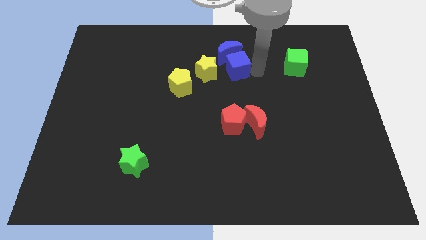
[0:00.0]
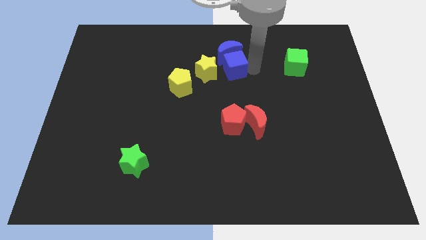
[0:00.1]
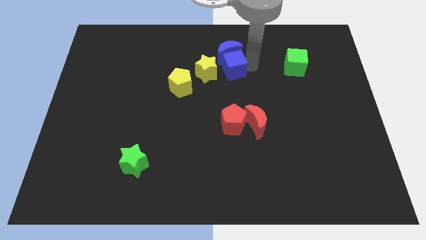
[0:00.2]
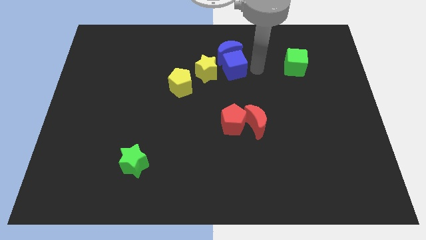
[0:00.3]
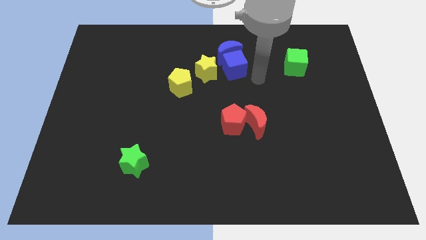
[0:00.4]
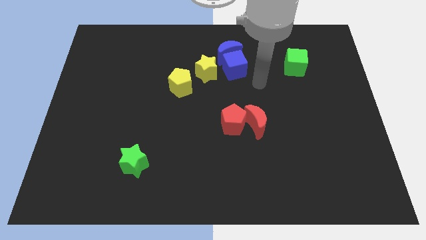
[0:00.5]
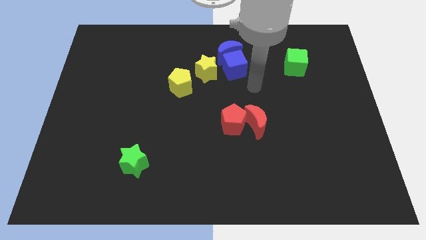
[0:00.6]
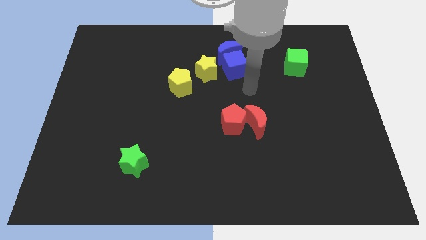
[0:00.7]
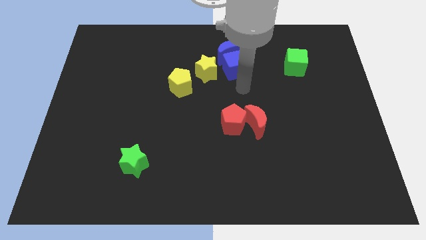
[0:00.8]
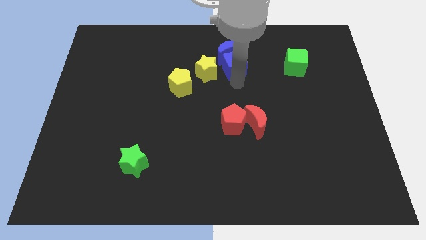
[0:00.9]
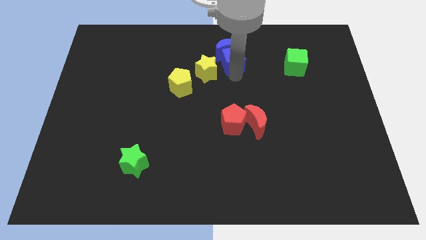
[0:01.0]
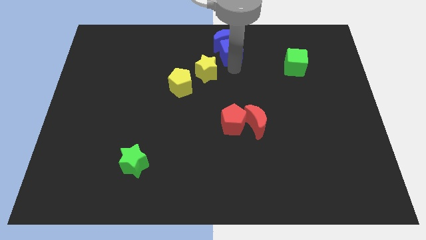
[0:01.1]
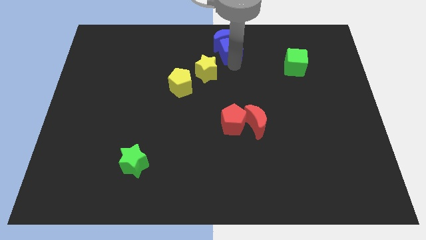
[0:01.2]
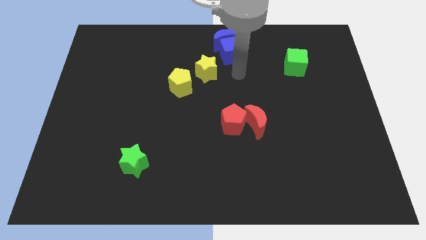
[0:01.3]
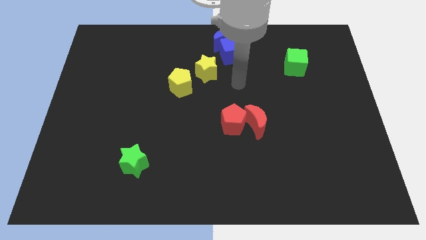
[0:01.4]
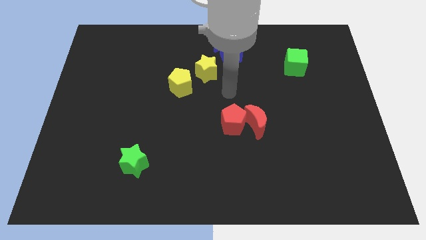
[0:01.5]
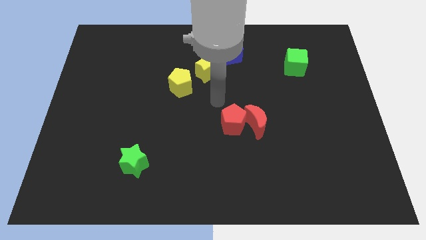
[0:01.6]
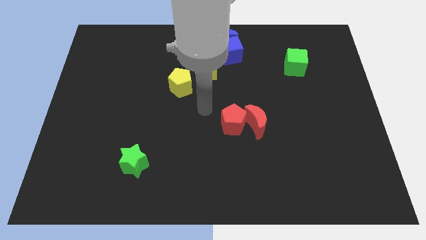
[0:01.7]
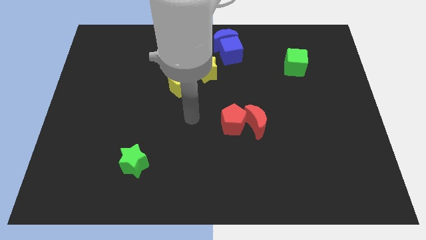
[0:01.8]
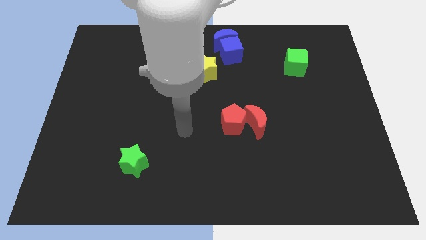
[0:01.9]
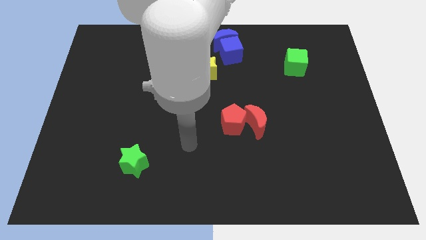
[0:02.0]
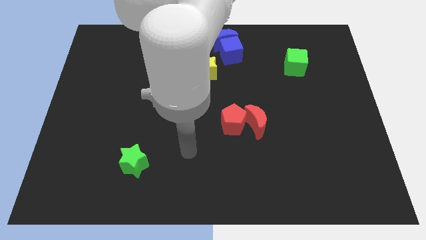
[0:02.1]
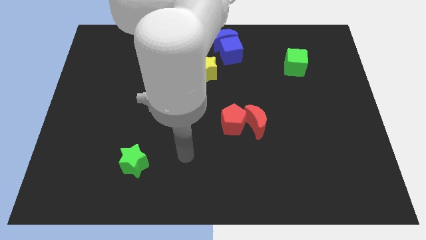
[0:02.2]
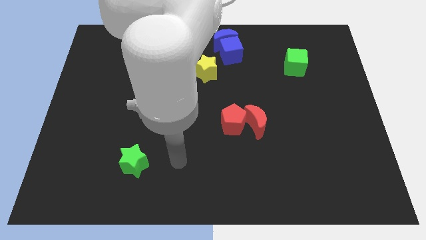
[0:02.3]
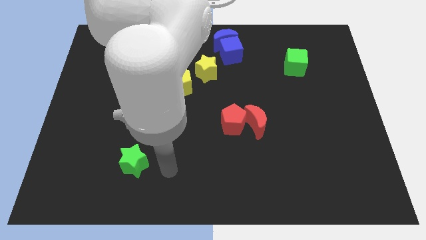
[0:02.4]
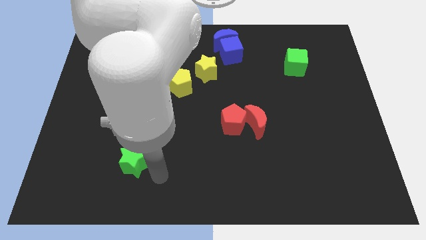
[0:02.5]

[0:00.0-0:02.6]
place your arm below green star

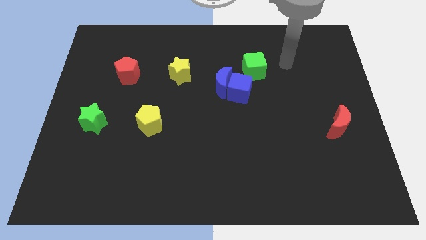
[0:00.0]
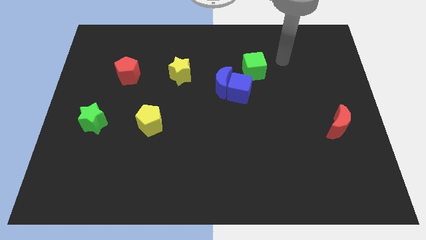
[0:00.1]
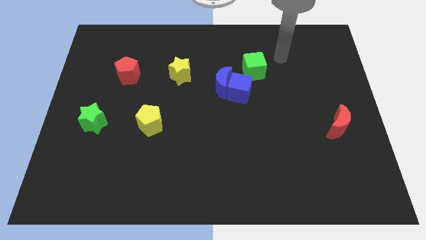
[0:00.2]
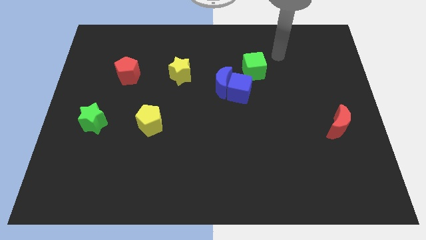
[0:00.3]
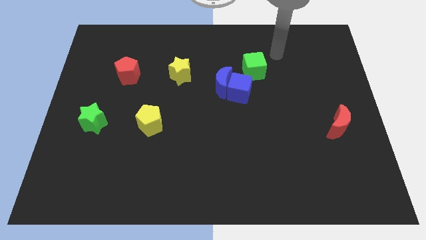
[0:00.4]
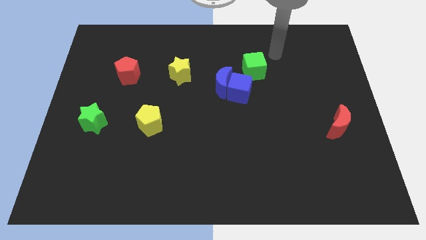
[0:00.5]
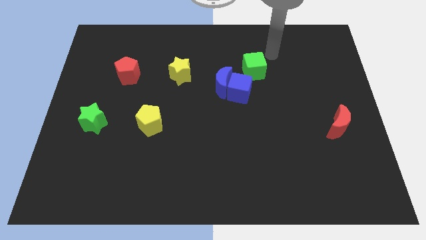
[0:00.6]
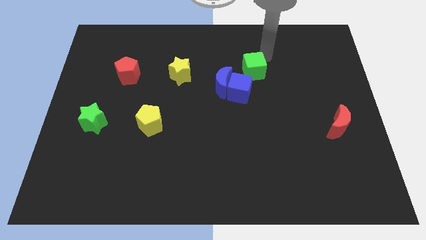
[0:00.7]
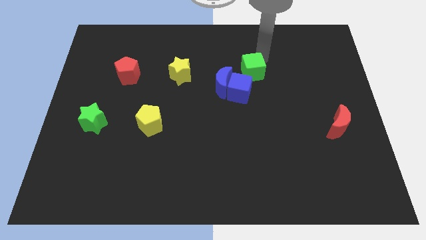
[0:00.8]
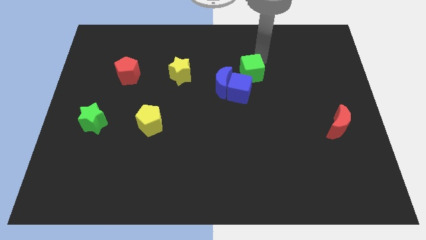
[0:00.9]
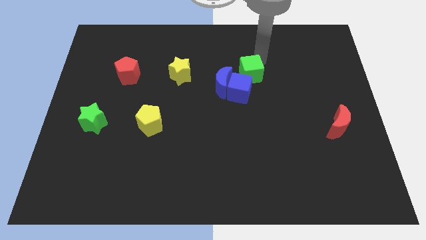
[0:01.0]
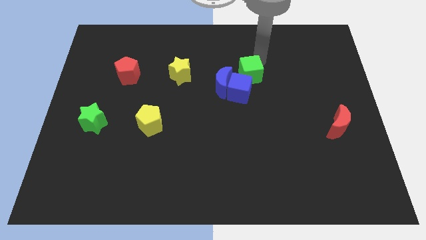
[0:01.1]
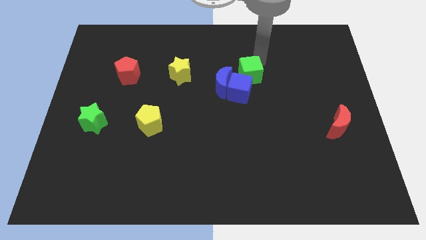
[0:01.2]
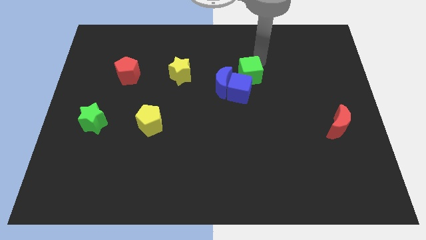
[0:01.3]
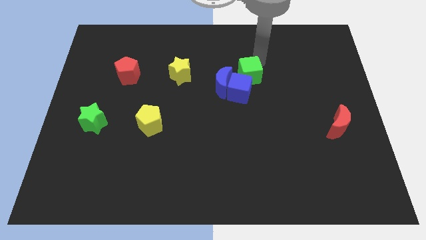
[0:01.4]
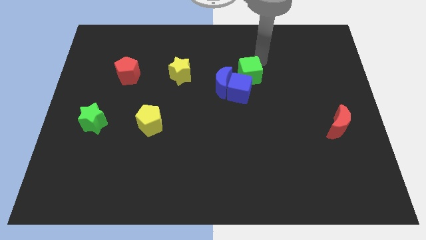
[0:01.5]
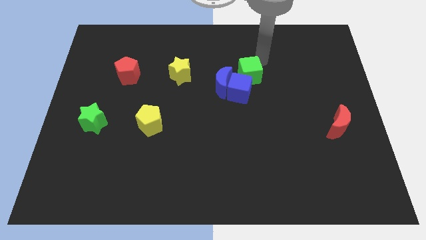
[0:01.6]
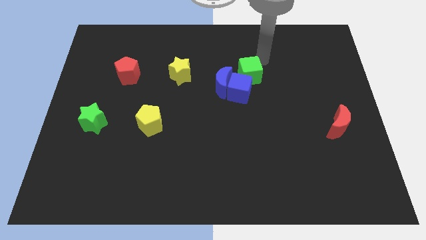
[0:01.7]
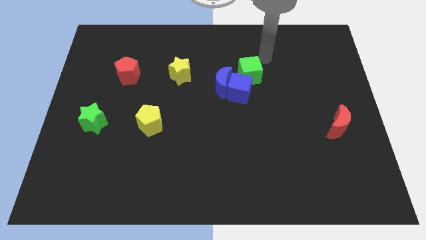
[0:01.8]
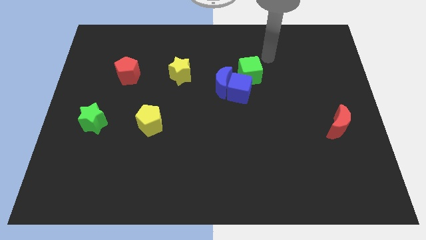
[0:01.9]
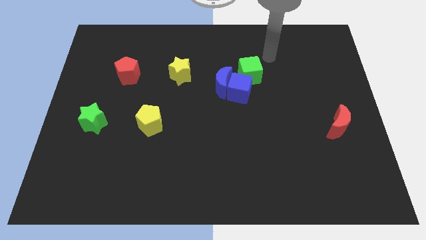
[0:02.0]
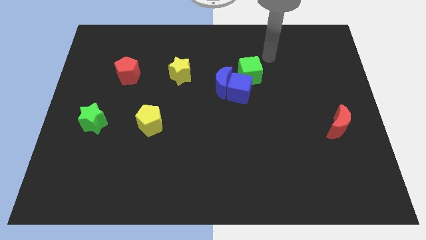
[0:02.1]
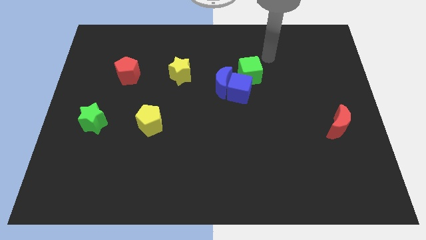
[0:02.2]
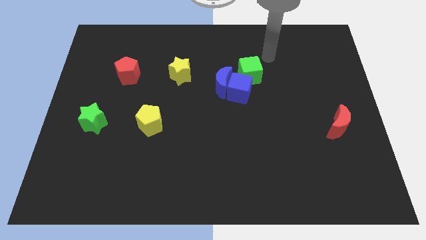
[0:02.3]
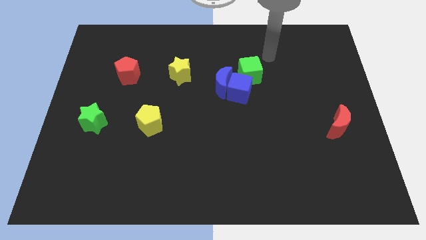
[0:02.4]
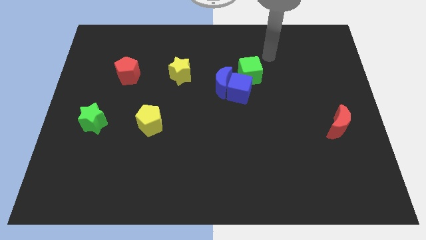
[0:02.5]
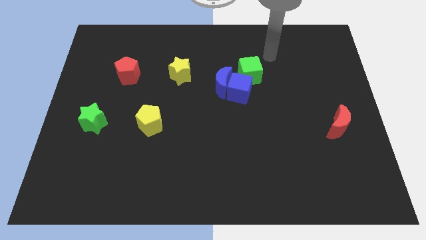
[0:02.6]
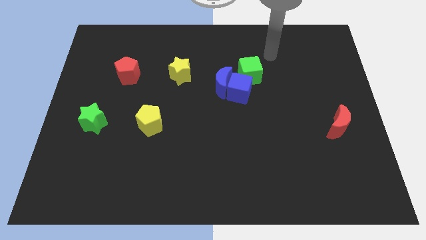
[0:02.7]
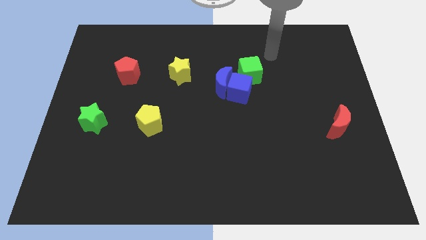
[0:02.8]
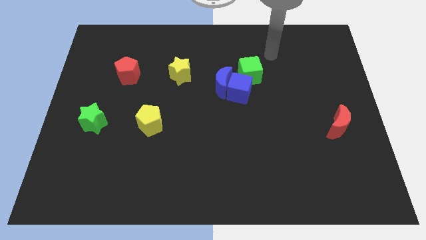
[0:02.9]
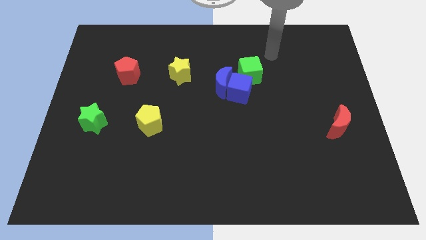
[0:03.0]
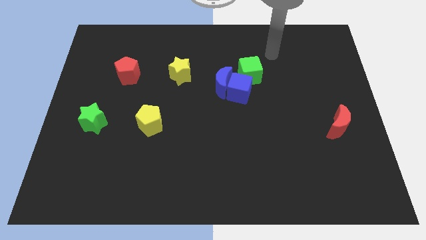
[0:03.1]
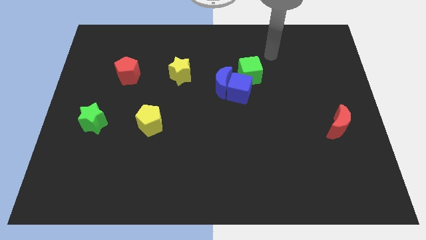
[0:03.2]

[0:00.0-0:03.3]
place green cube at the top of blue cube

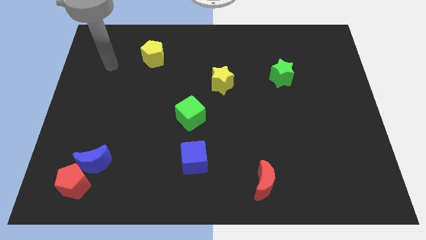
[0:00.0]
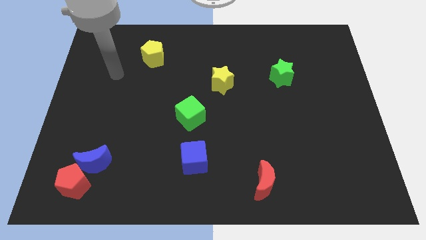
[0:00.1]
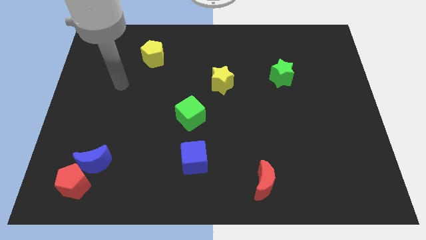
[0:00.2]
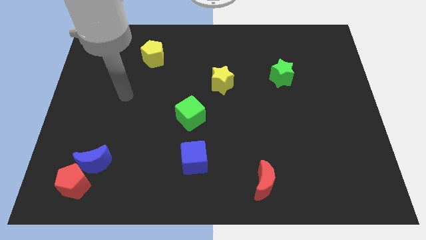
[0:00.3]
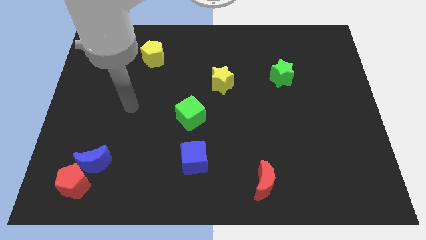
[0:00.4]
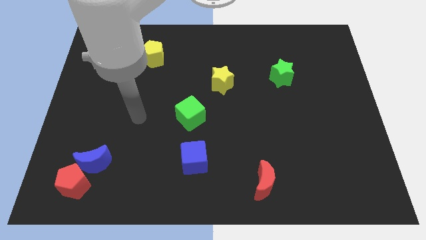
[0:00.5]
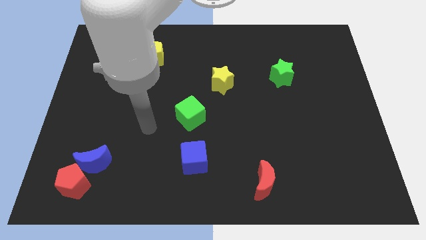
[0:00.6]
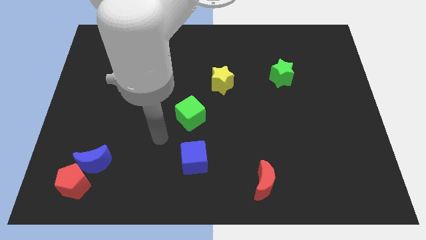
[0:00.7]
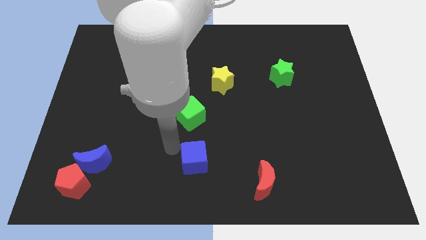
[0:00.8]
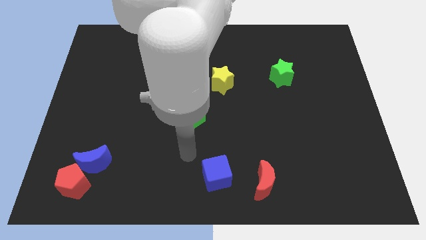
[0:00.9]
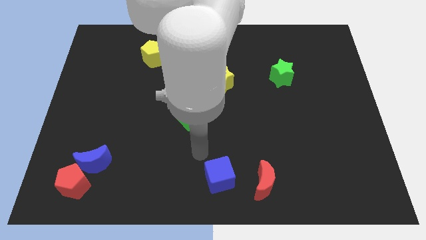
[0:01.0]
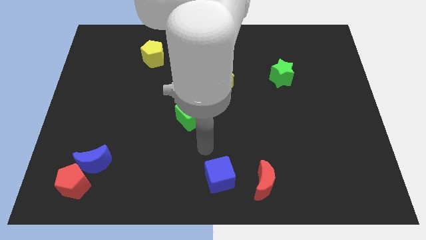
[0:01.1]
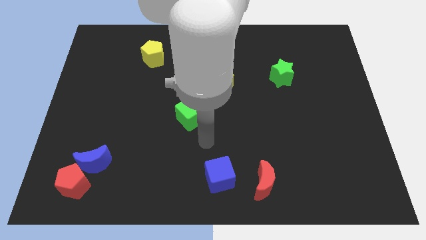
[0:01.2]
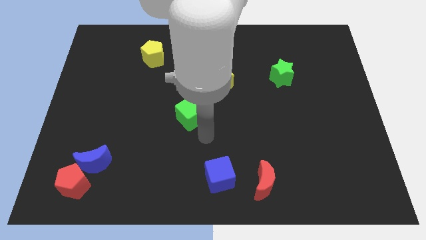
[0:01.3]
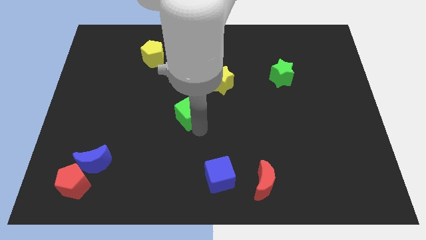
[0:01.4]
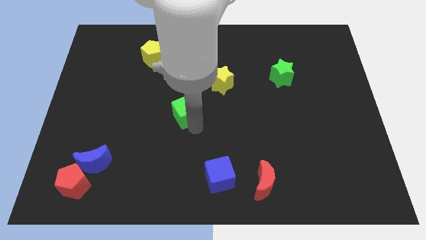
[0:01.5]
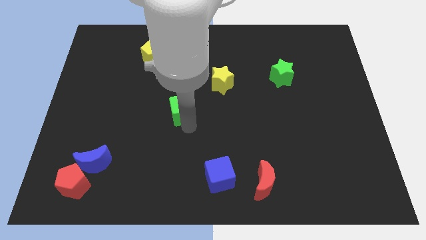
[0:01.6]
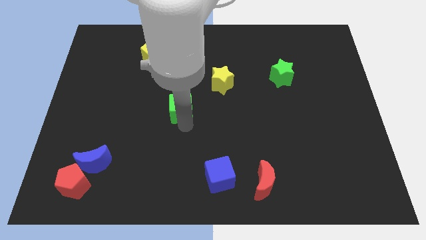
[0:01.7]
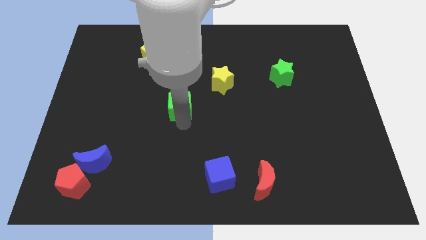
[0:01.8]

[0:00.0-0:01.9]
push the blue cube towards bottom center of the board

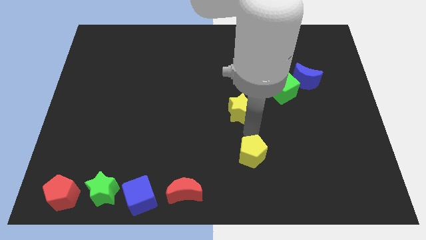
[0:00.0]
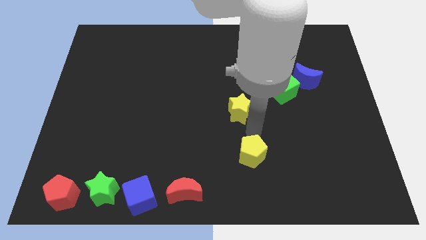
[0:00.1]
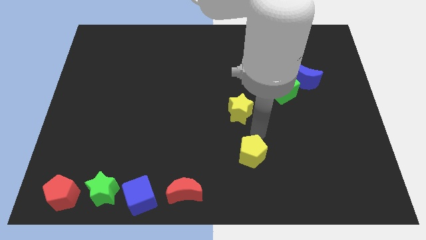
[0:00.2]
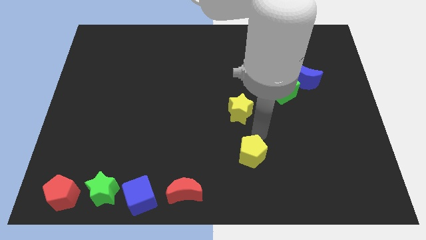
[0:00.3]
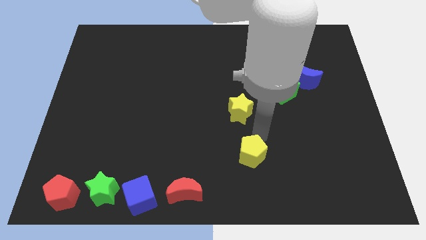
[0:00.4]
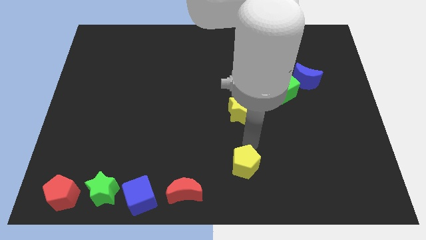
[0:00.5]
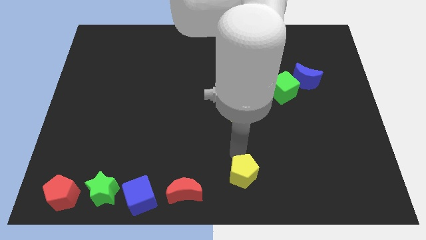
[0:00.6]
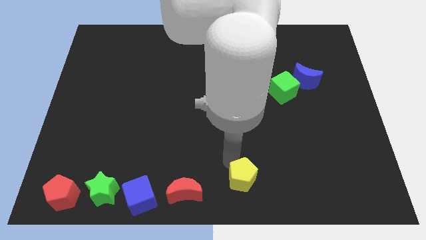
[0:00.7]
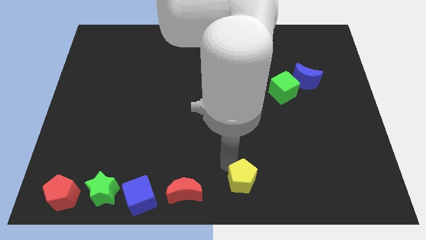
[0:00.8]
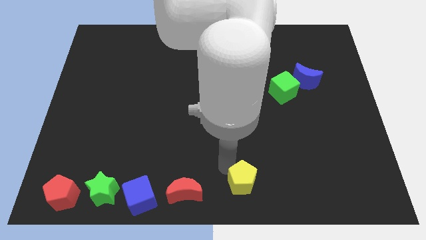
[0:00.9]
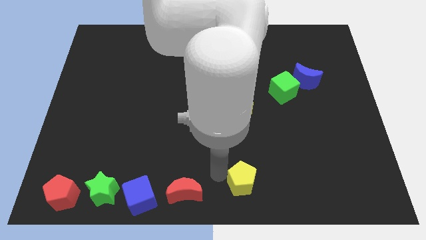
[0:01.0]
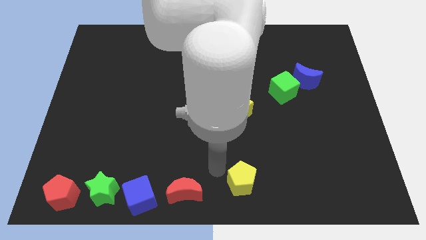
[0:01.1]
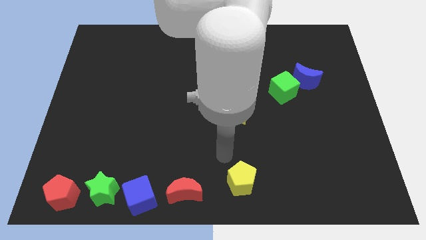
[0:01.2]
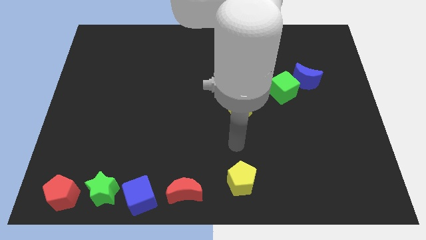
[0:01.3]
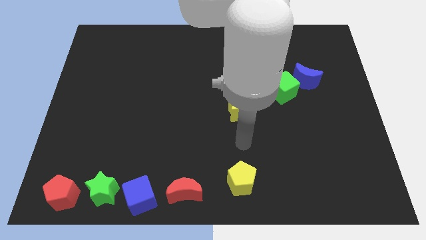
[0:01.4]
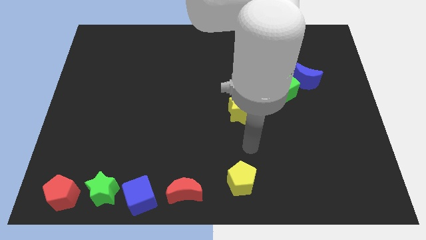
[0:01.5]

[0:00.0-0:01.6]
move the yellow pentagon to the bottom centre of the board
